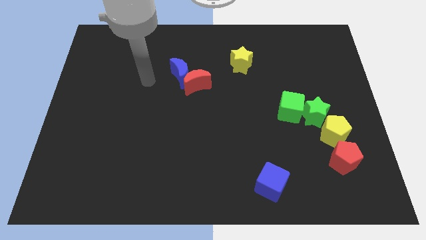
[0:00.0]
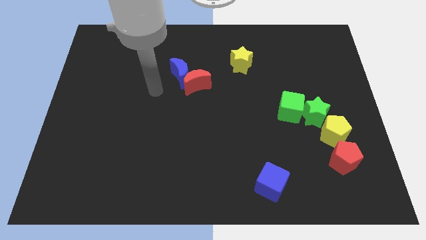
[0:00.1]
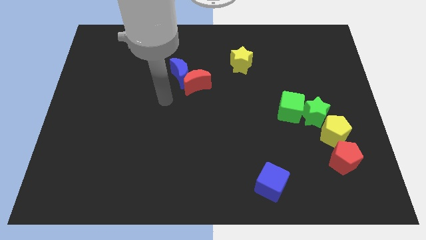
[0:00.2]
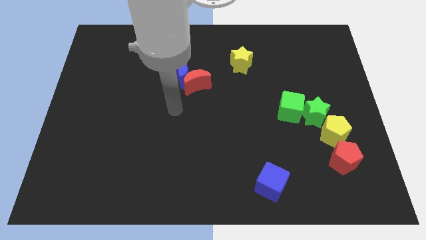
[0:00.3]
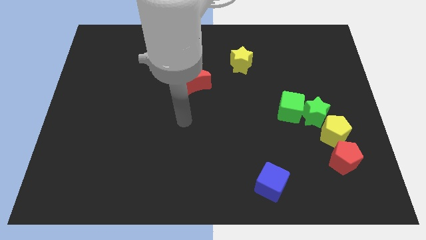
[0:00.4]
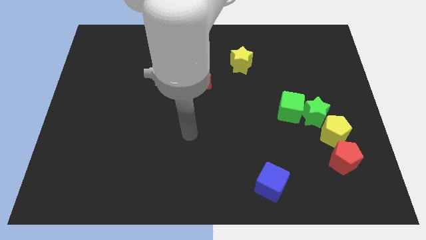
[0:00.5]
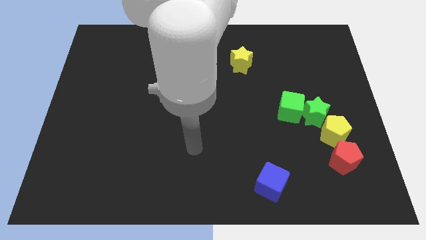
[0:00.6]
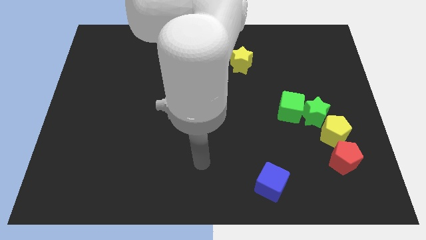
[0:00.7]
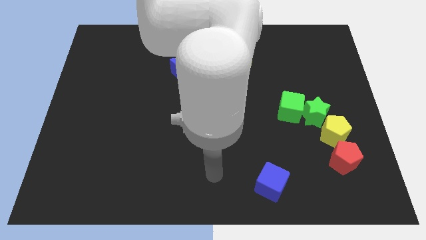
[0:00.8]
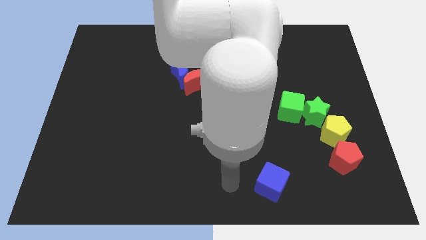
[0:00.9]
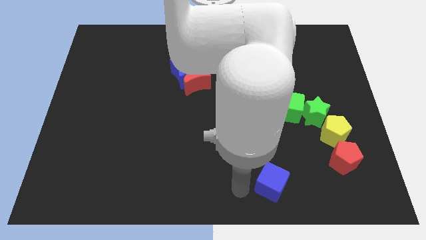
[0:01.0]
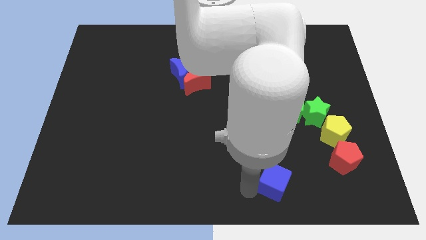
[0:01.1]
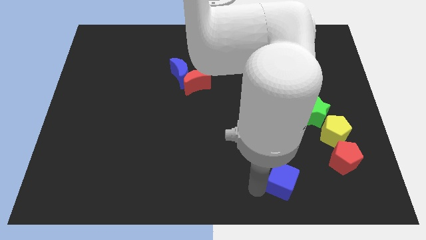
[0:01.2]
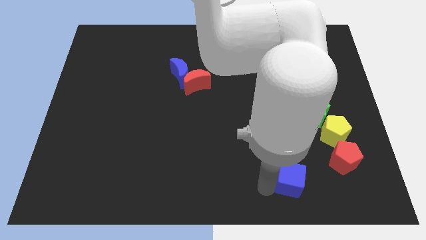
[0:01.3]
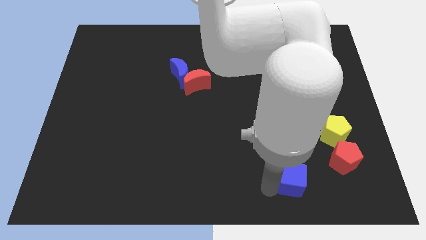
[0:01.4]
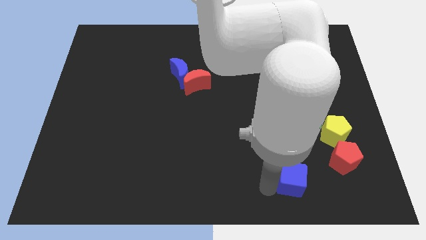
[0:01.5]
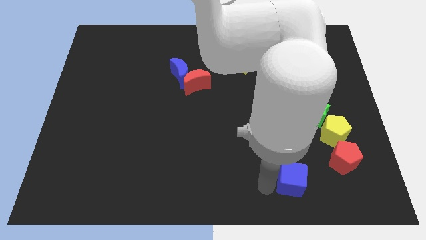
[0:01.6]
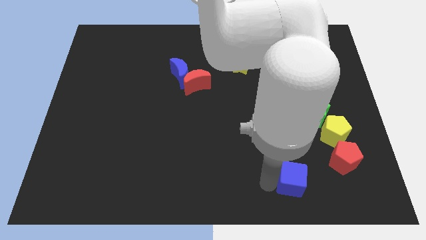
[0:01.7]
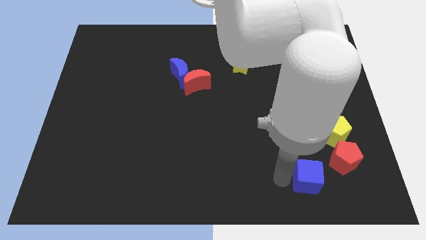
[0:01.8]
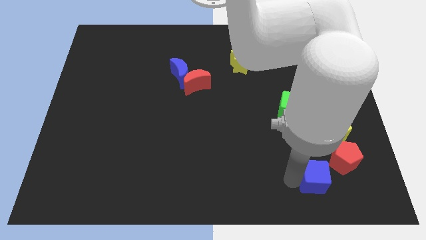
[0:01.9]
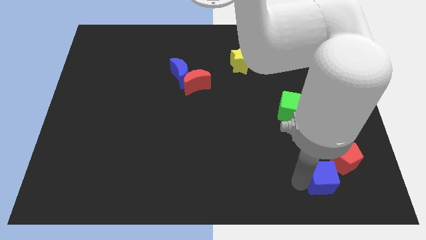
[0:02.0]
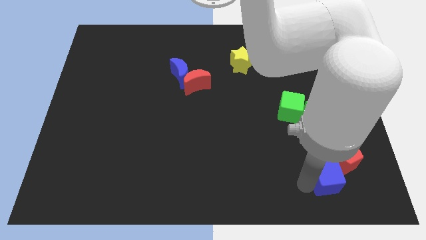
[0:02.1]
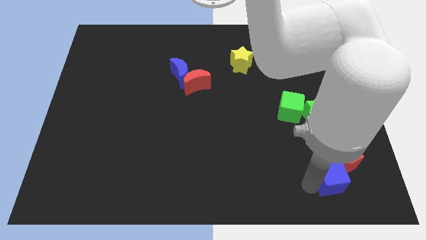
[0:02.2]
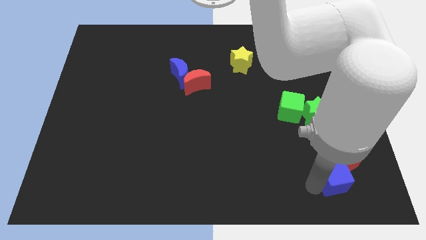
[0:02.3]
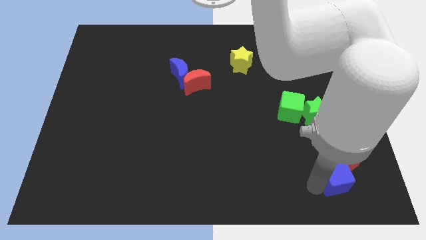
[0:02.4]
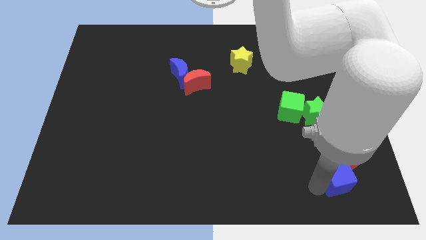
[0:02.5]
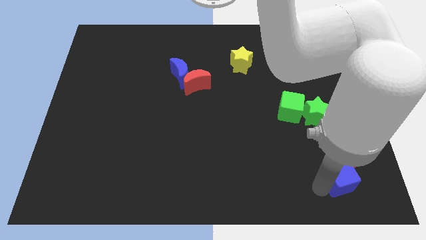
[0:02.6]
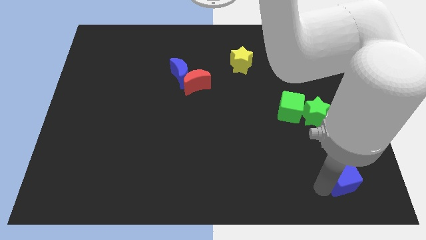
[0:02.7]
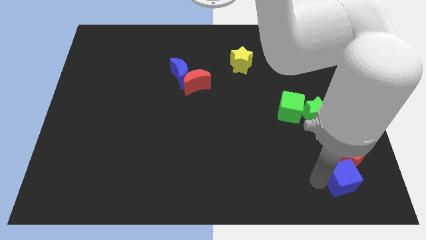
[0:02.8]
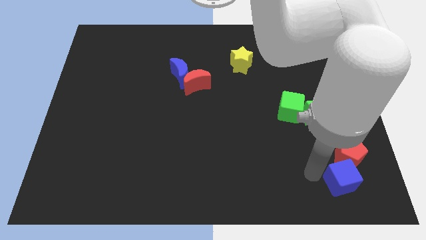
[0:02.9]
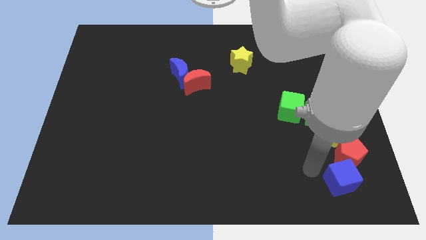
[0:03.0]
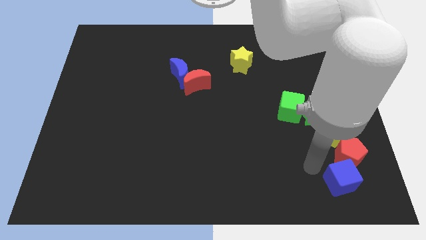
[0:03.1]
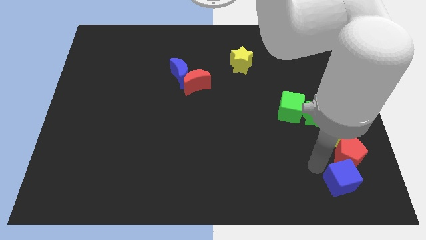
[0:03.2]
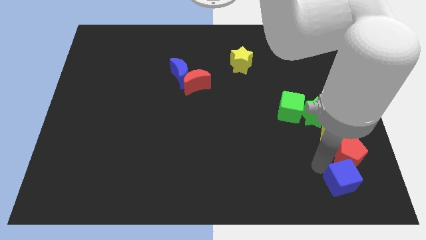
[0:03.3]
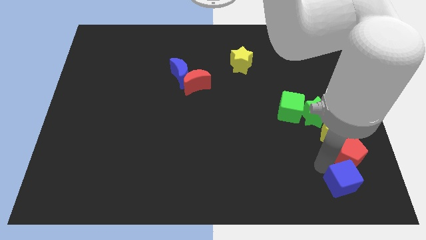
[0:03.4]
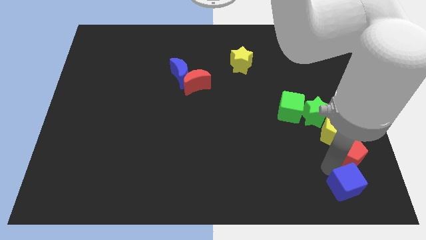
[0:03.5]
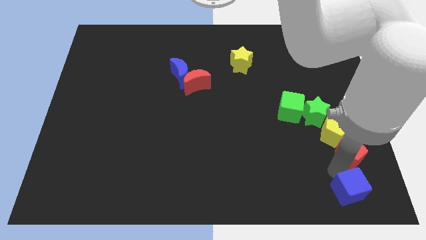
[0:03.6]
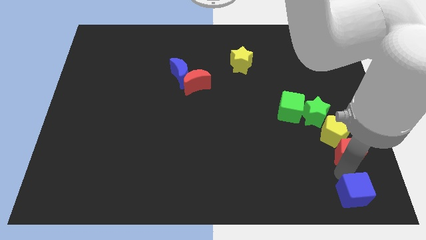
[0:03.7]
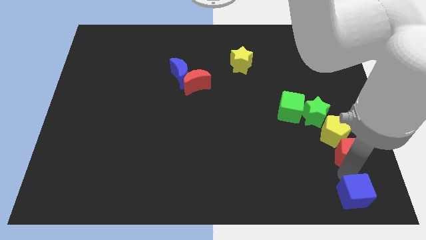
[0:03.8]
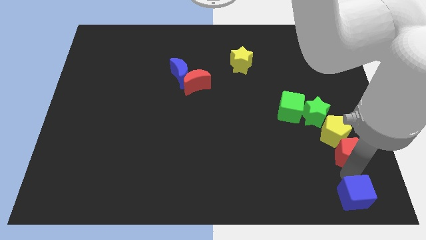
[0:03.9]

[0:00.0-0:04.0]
push the blue cube towards the bottom right side of the board

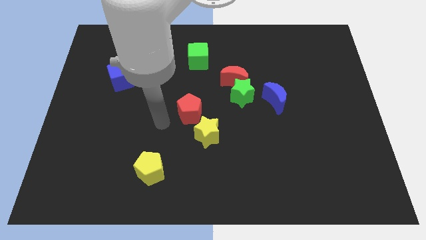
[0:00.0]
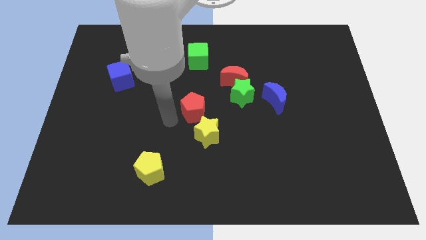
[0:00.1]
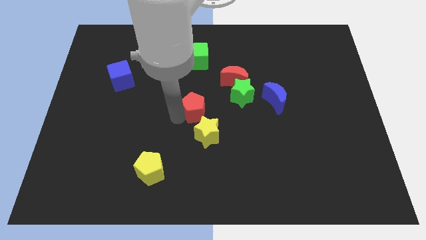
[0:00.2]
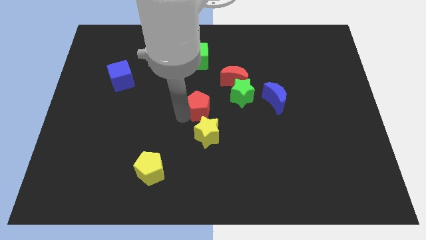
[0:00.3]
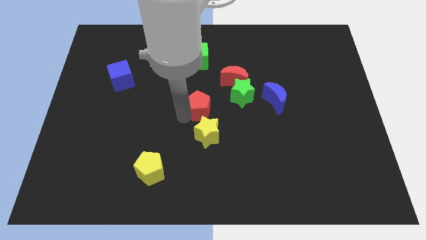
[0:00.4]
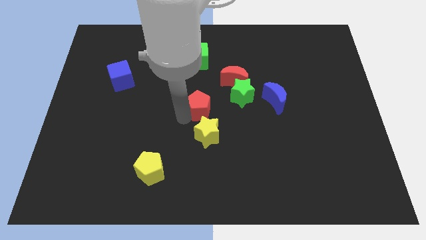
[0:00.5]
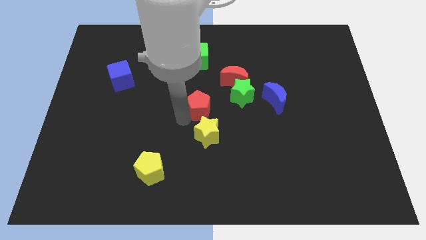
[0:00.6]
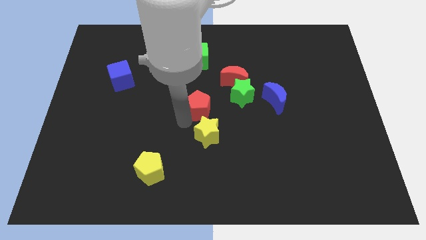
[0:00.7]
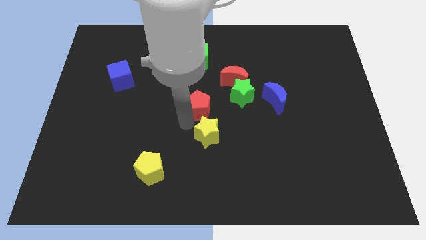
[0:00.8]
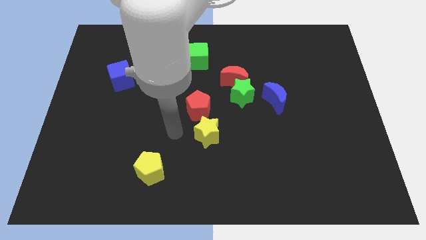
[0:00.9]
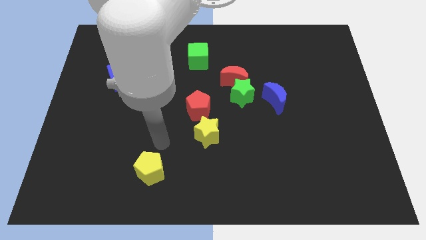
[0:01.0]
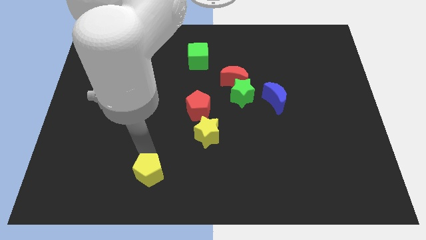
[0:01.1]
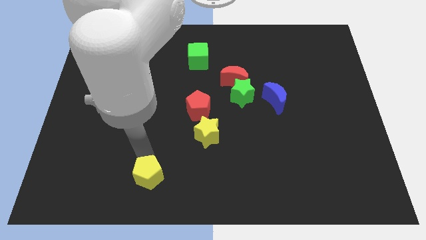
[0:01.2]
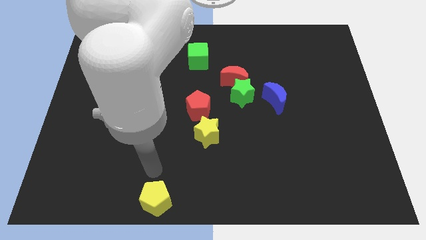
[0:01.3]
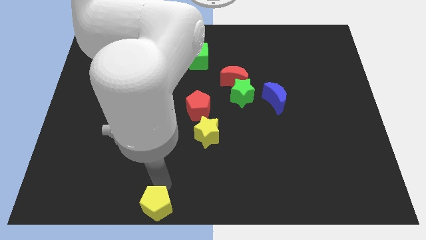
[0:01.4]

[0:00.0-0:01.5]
push the yellow pentagon to the bottom

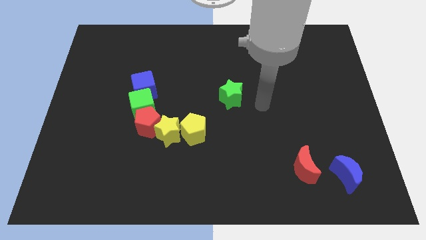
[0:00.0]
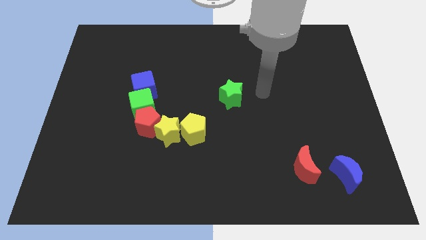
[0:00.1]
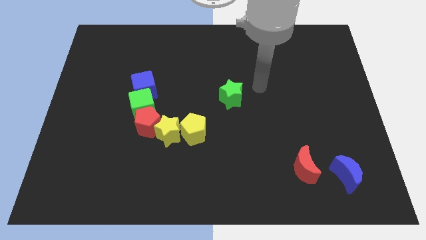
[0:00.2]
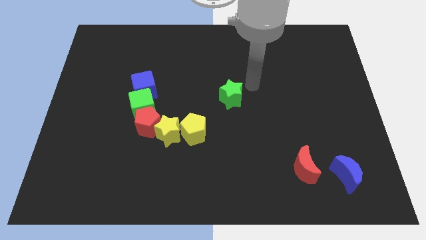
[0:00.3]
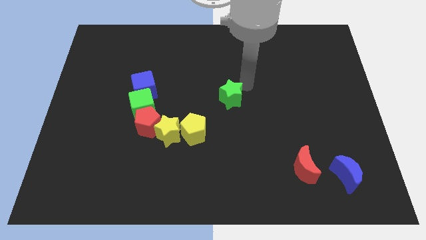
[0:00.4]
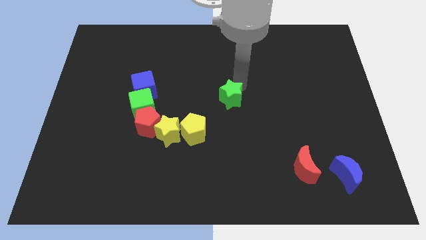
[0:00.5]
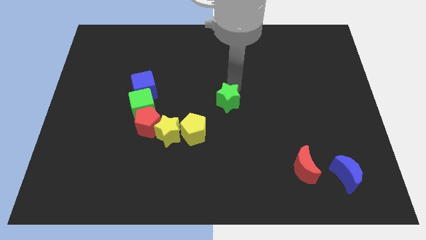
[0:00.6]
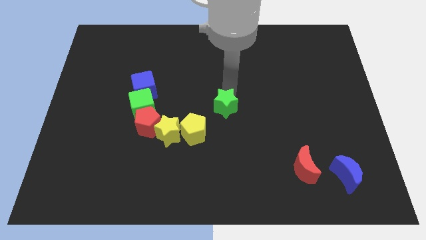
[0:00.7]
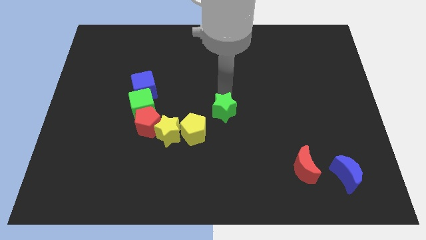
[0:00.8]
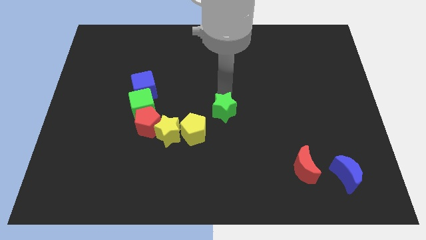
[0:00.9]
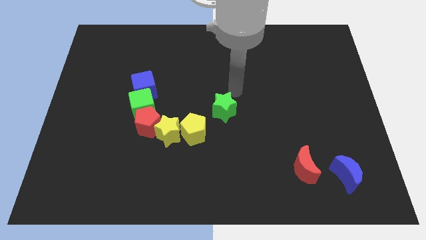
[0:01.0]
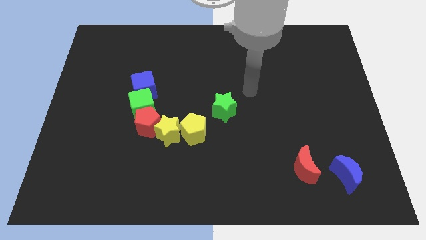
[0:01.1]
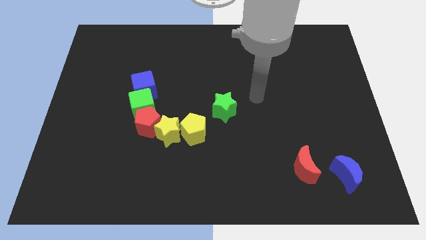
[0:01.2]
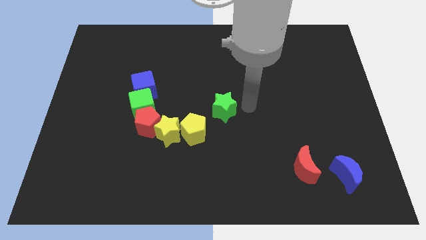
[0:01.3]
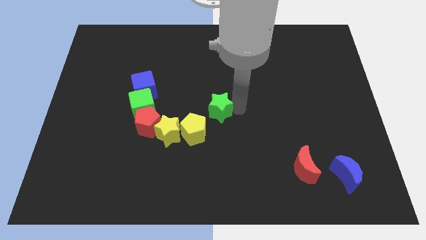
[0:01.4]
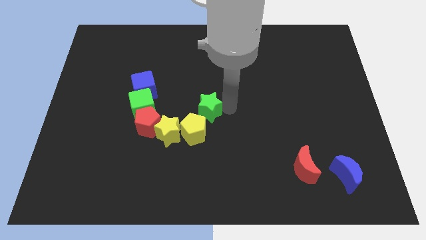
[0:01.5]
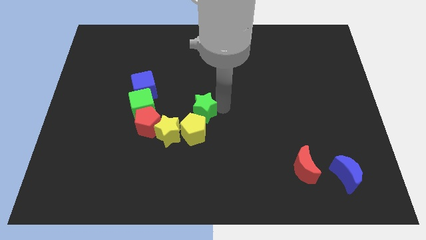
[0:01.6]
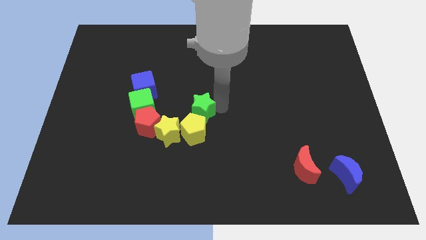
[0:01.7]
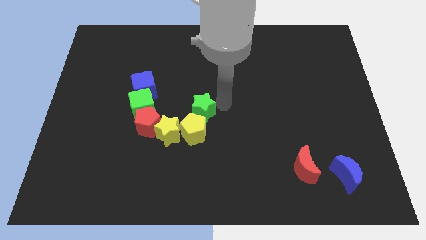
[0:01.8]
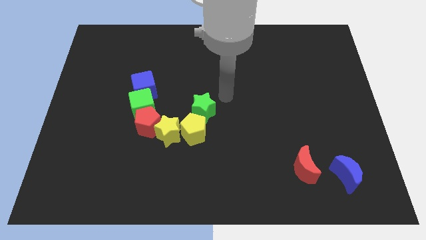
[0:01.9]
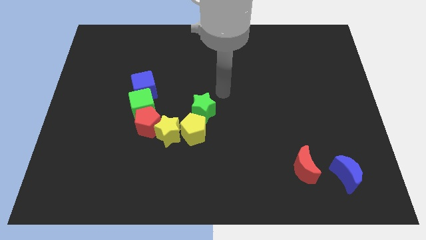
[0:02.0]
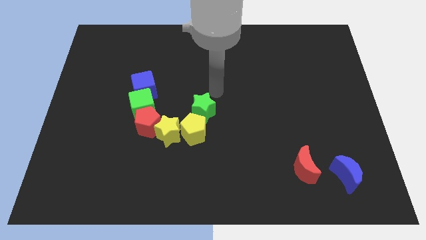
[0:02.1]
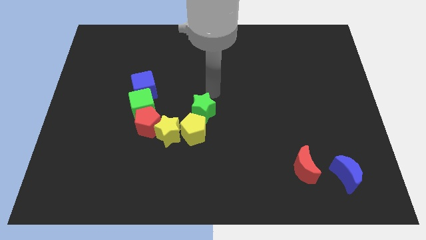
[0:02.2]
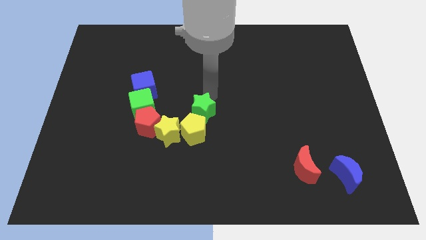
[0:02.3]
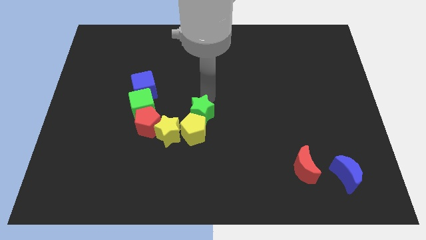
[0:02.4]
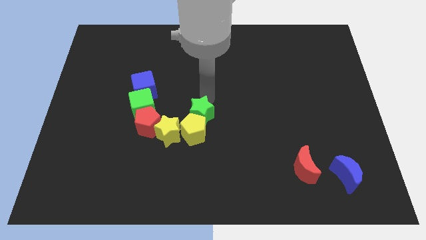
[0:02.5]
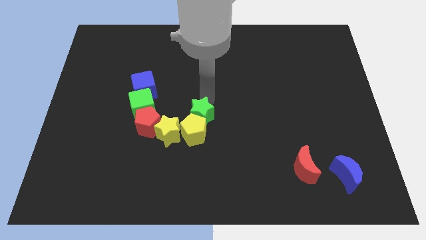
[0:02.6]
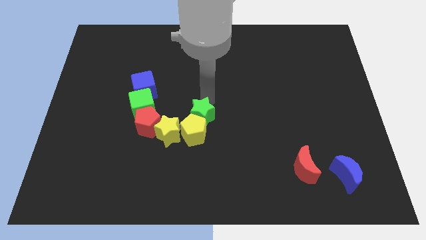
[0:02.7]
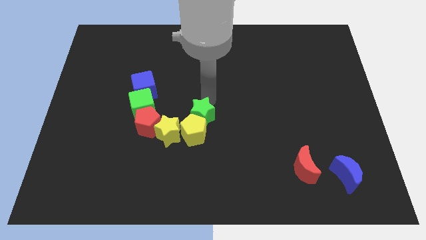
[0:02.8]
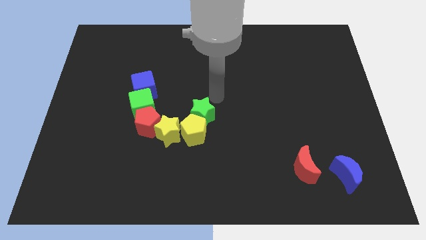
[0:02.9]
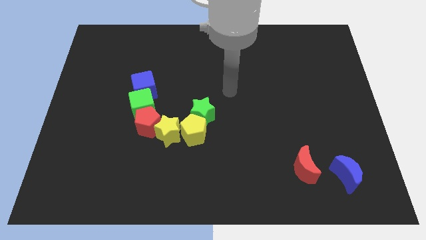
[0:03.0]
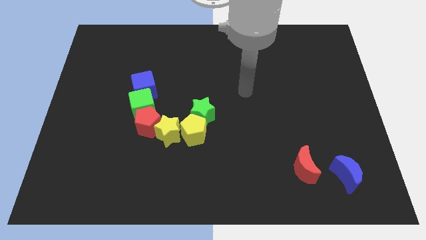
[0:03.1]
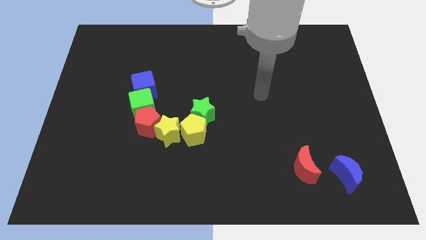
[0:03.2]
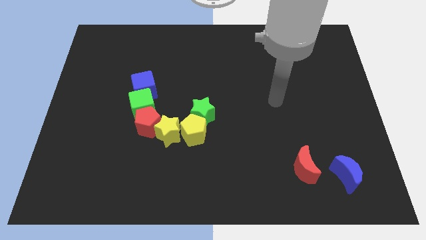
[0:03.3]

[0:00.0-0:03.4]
place the green star near to the group of blocks
